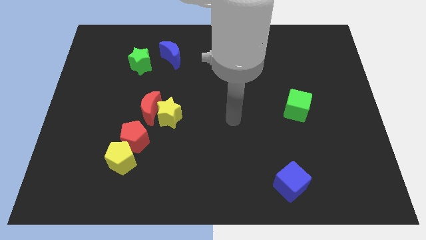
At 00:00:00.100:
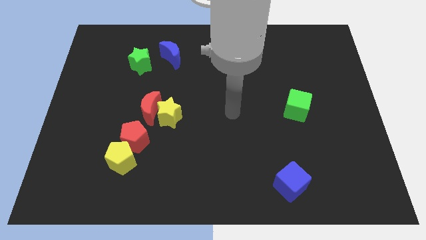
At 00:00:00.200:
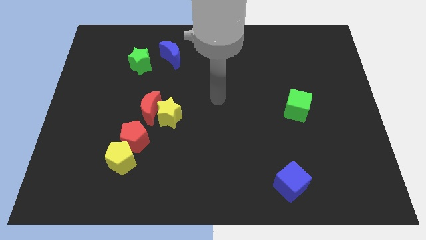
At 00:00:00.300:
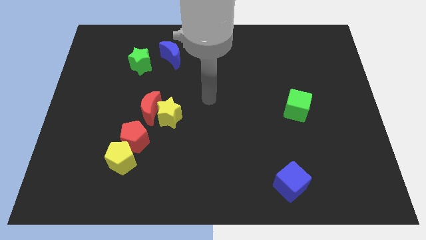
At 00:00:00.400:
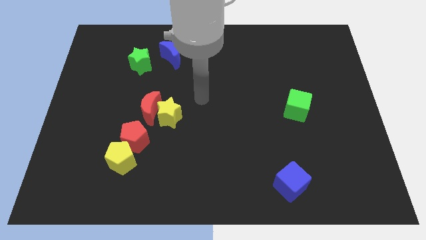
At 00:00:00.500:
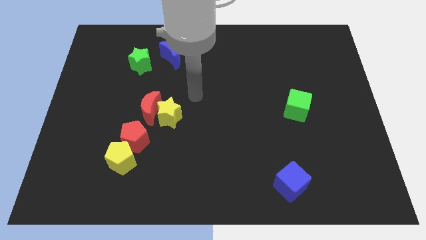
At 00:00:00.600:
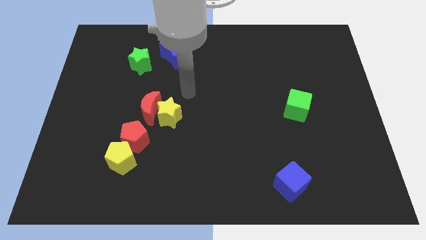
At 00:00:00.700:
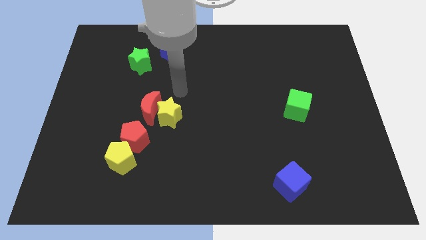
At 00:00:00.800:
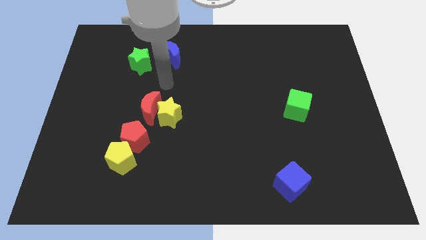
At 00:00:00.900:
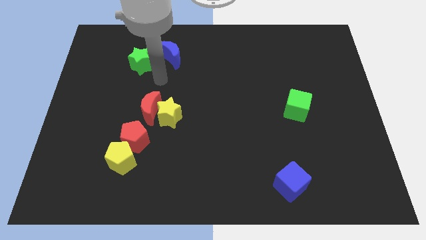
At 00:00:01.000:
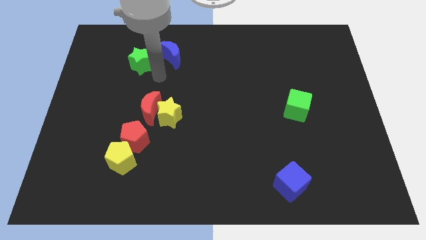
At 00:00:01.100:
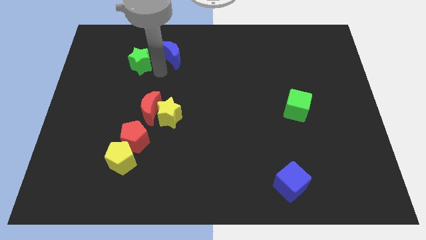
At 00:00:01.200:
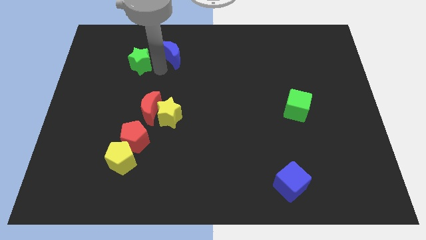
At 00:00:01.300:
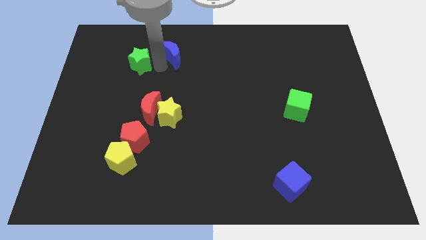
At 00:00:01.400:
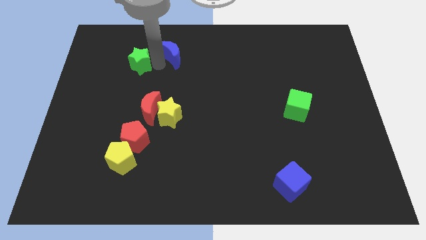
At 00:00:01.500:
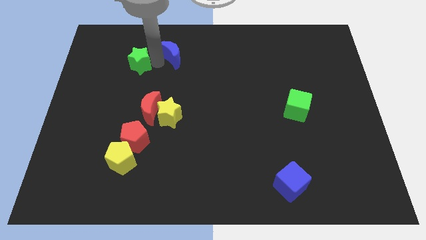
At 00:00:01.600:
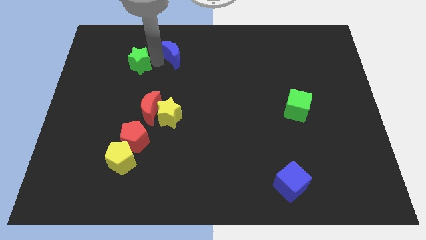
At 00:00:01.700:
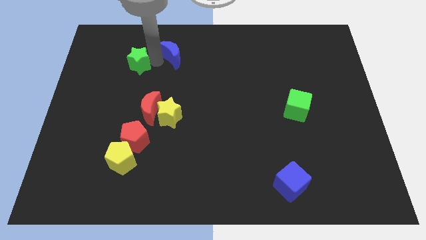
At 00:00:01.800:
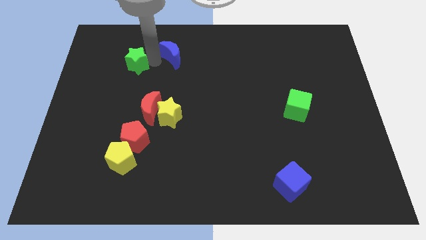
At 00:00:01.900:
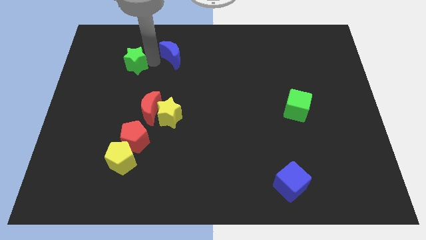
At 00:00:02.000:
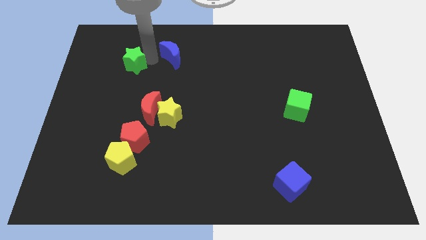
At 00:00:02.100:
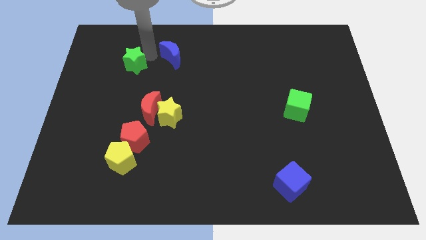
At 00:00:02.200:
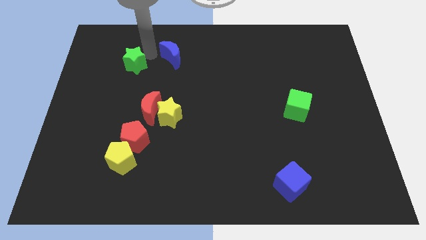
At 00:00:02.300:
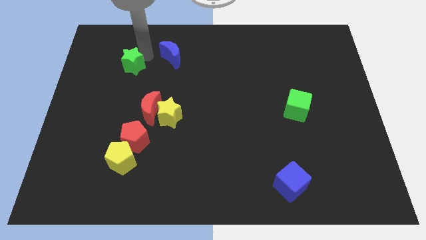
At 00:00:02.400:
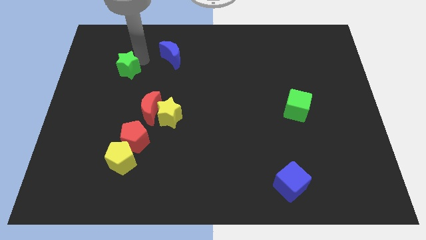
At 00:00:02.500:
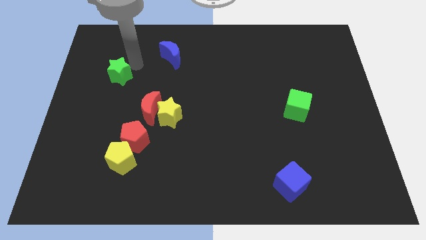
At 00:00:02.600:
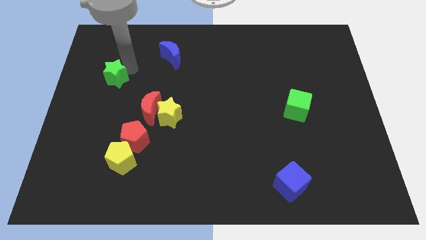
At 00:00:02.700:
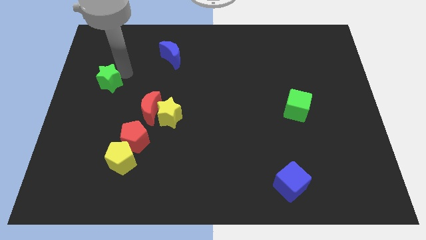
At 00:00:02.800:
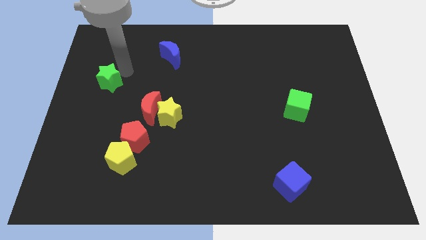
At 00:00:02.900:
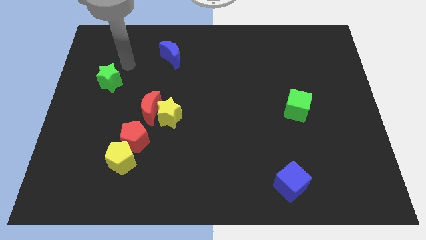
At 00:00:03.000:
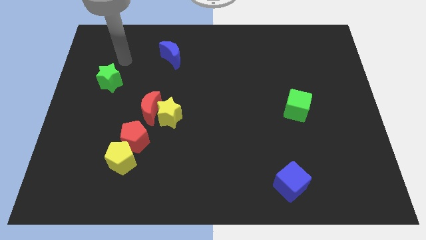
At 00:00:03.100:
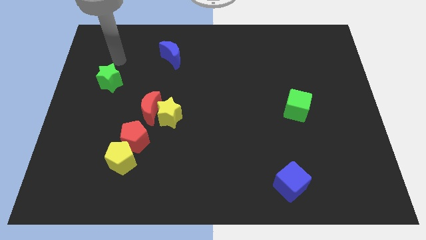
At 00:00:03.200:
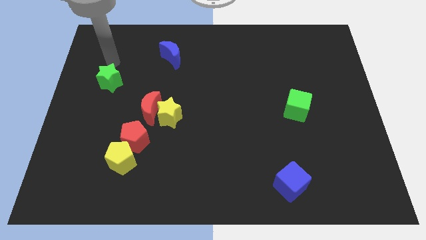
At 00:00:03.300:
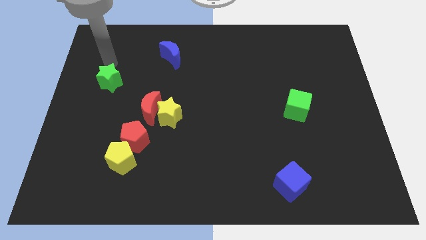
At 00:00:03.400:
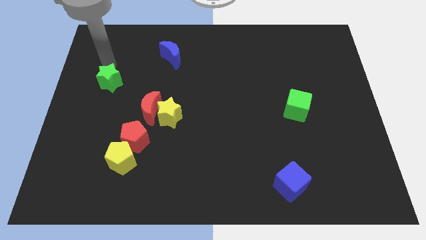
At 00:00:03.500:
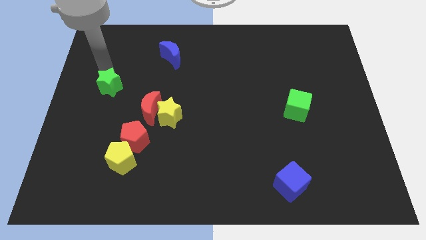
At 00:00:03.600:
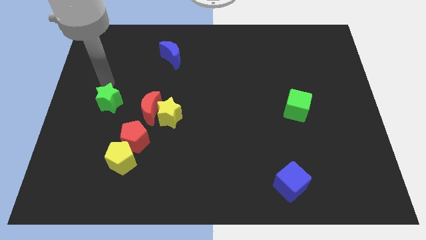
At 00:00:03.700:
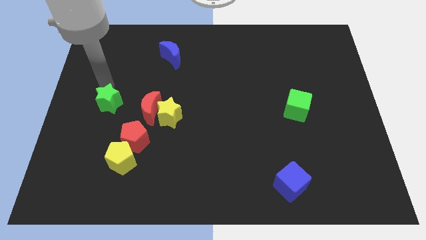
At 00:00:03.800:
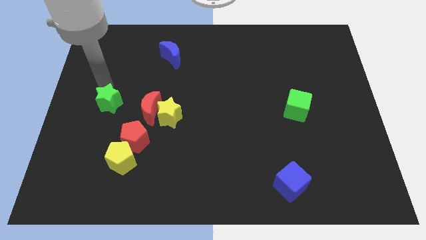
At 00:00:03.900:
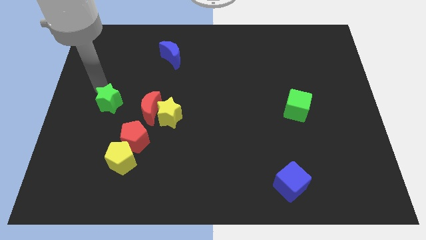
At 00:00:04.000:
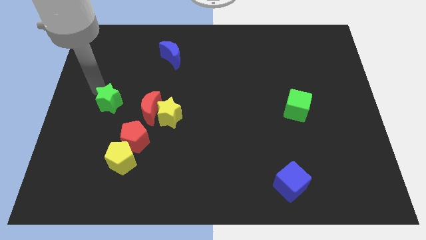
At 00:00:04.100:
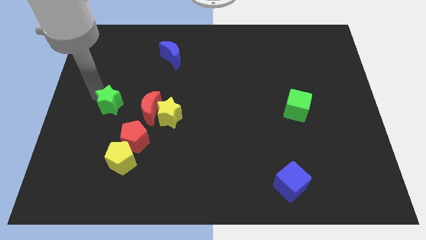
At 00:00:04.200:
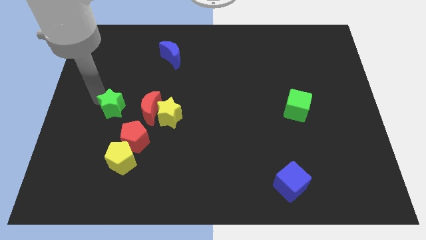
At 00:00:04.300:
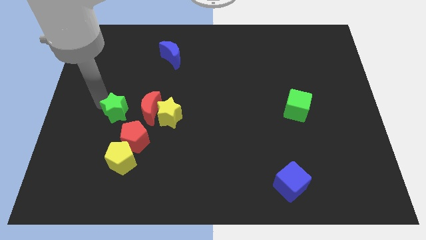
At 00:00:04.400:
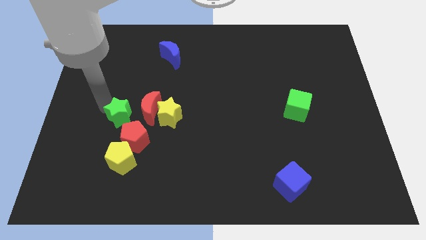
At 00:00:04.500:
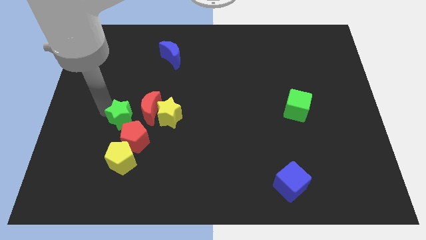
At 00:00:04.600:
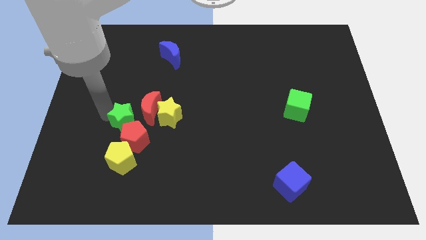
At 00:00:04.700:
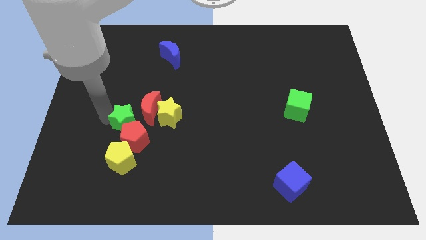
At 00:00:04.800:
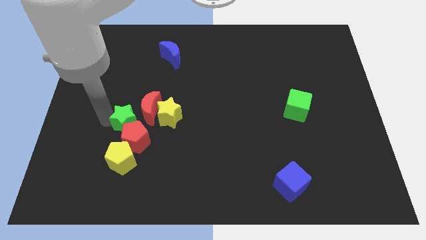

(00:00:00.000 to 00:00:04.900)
put the green star to the red pentagon

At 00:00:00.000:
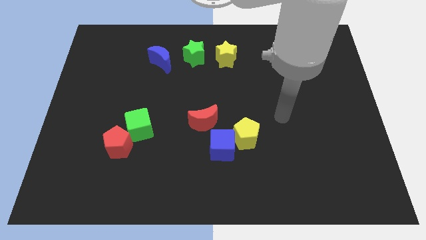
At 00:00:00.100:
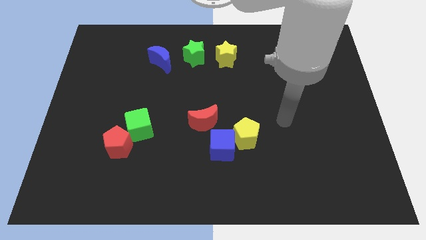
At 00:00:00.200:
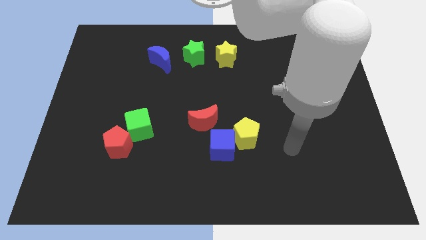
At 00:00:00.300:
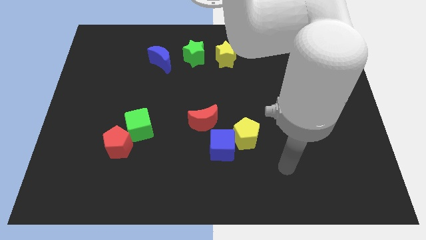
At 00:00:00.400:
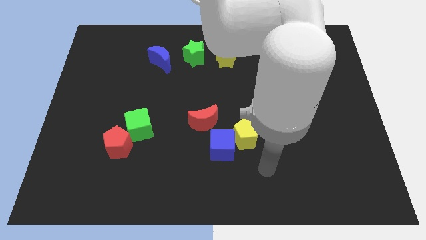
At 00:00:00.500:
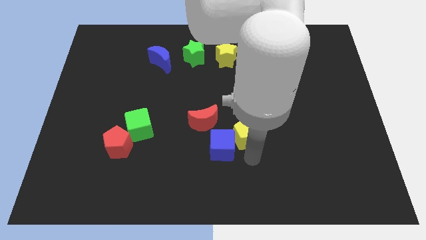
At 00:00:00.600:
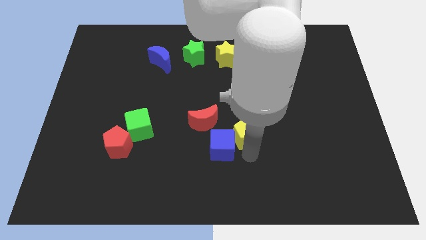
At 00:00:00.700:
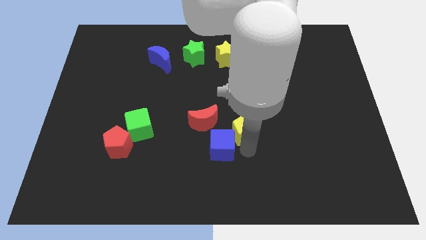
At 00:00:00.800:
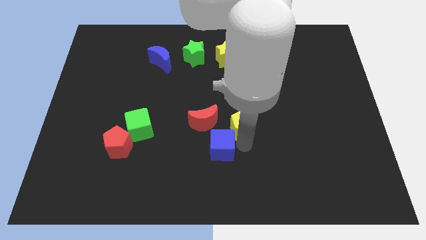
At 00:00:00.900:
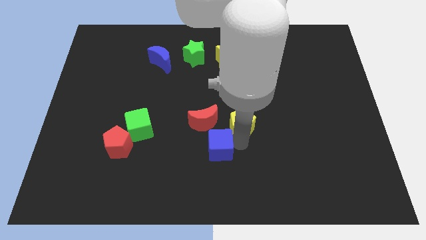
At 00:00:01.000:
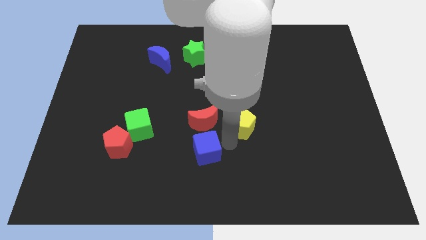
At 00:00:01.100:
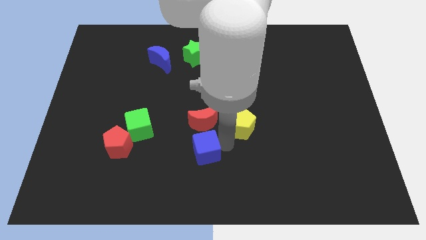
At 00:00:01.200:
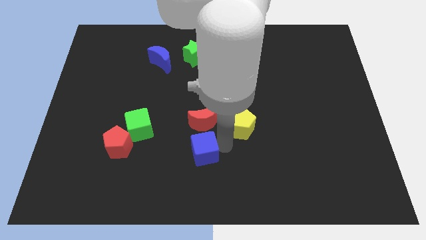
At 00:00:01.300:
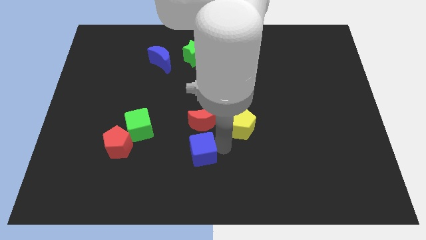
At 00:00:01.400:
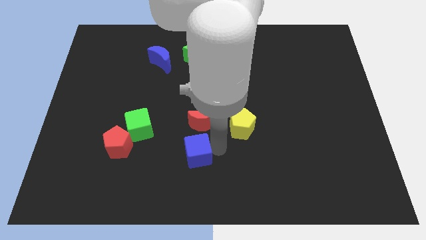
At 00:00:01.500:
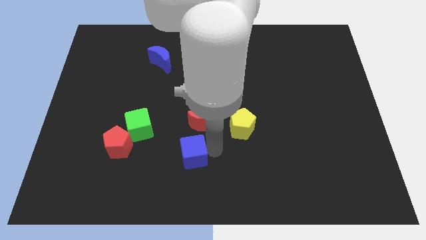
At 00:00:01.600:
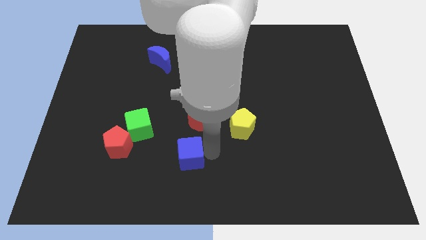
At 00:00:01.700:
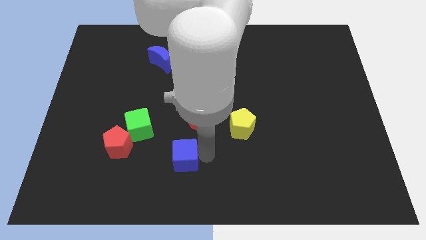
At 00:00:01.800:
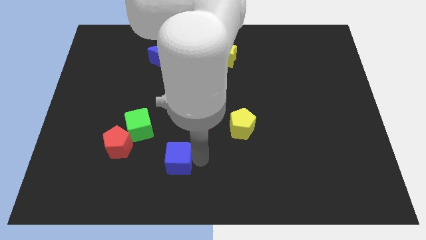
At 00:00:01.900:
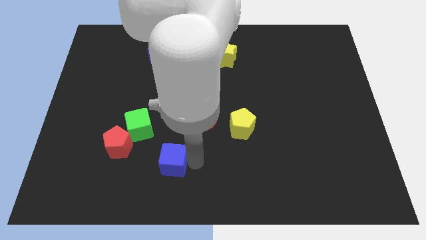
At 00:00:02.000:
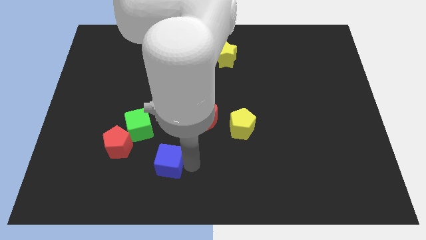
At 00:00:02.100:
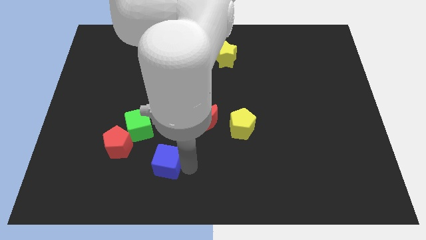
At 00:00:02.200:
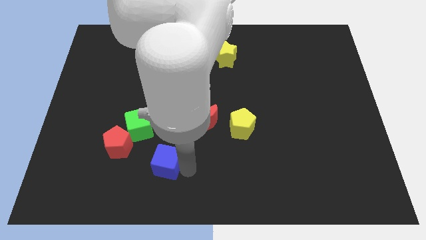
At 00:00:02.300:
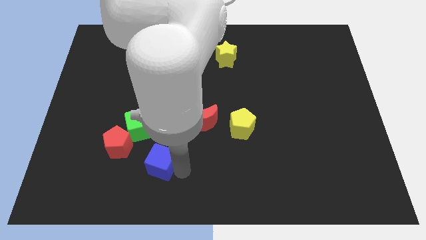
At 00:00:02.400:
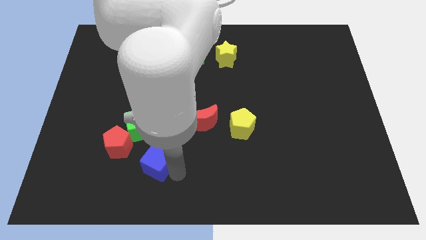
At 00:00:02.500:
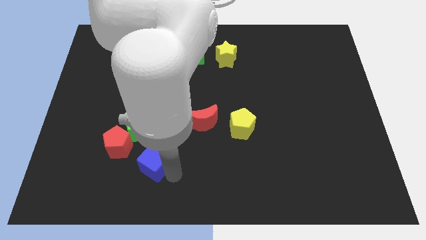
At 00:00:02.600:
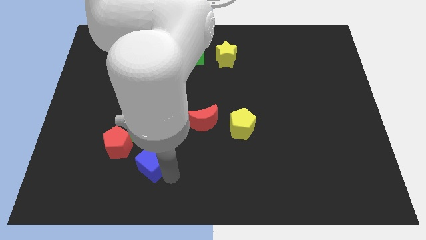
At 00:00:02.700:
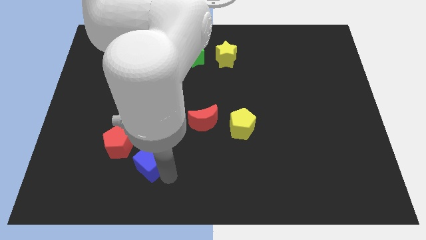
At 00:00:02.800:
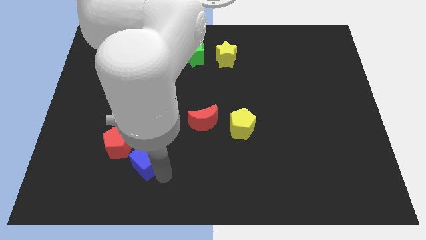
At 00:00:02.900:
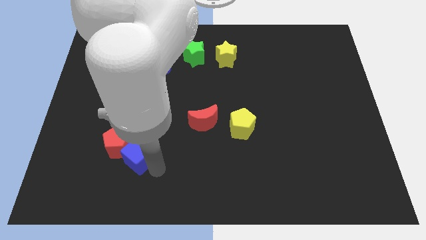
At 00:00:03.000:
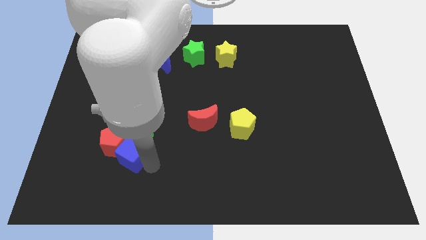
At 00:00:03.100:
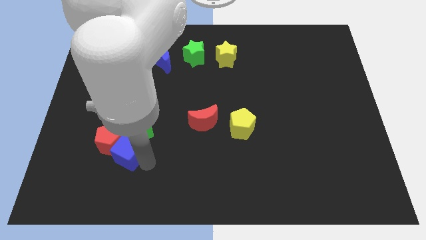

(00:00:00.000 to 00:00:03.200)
move the blue cube next to the red pentagon
